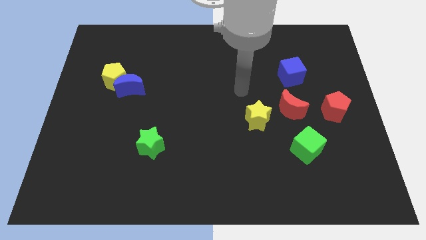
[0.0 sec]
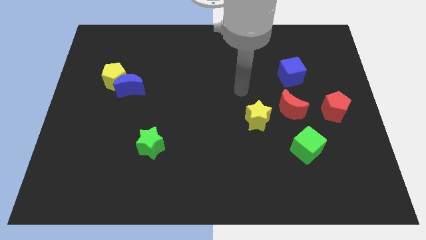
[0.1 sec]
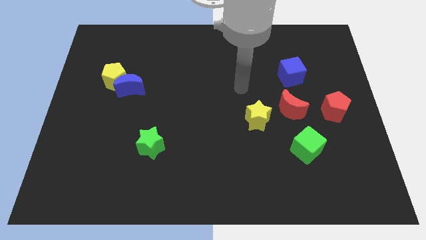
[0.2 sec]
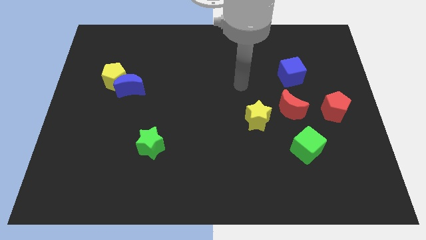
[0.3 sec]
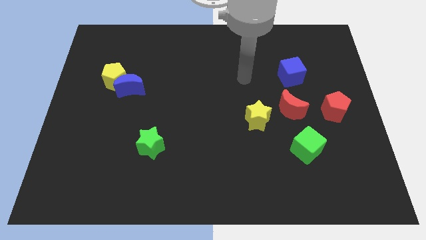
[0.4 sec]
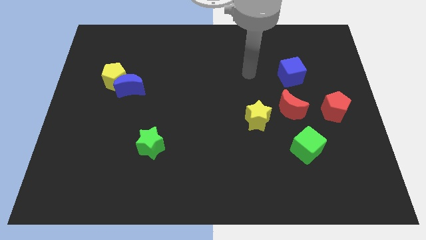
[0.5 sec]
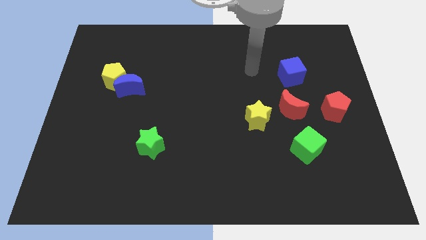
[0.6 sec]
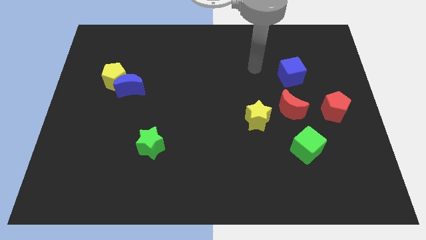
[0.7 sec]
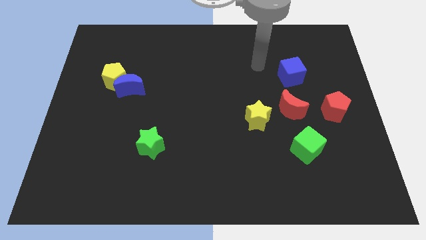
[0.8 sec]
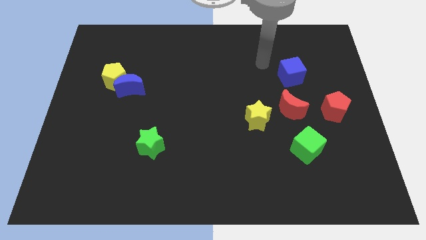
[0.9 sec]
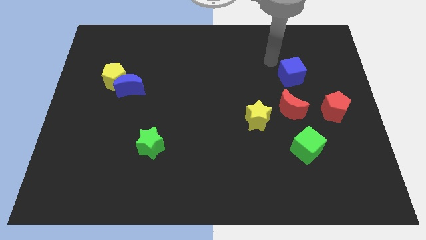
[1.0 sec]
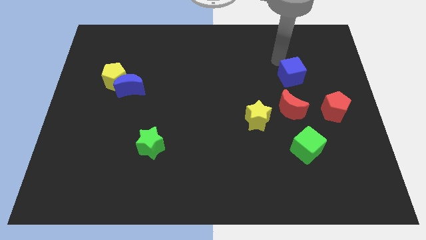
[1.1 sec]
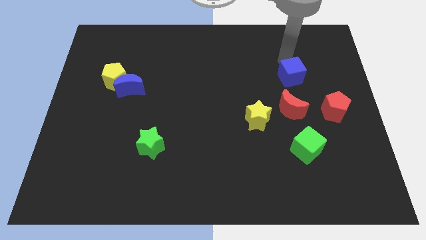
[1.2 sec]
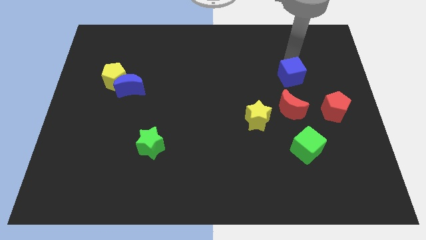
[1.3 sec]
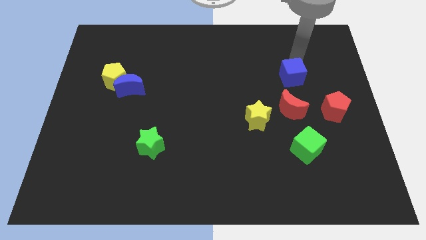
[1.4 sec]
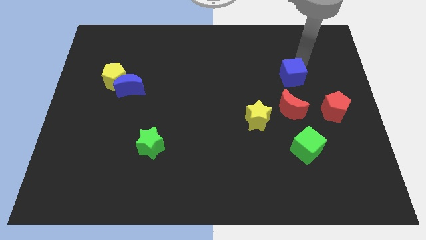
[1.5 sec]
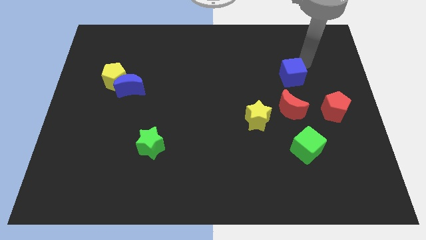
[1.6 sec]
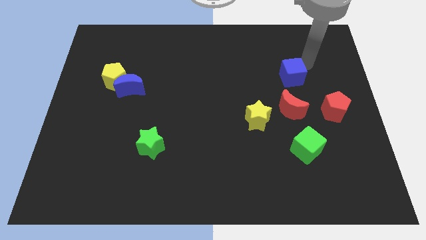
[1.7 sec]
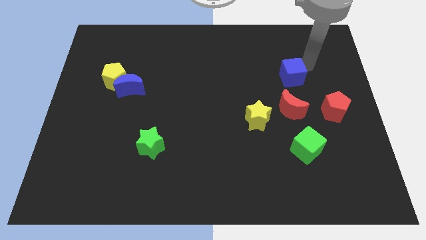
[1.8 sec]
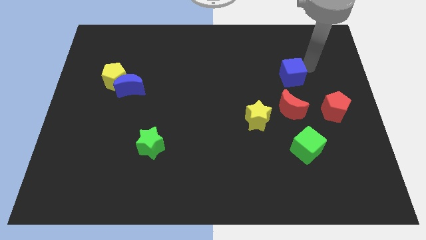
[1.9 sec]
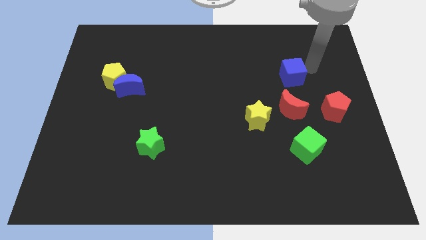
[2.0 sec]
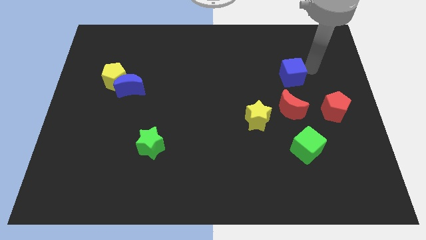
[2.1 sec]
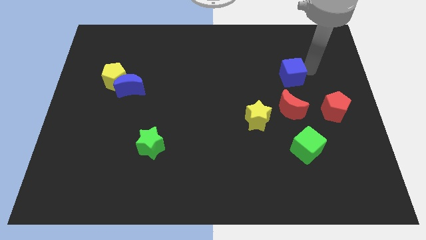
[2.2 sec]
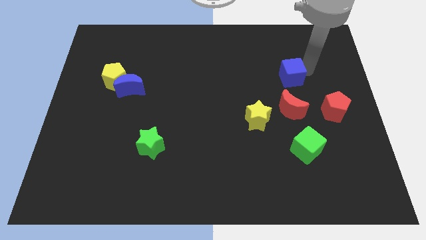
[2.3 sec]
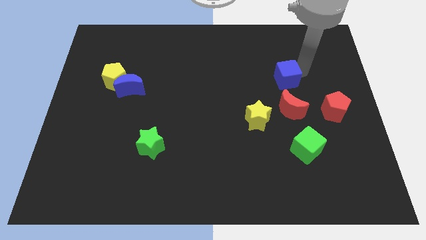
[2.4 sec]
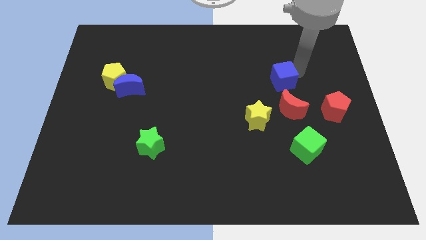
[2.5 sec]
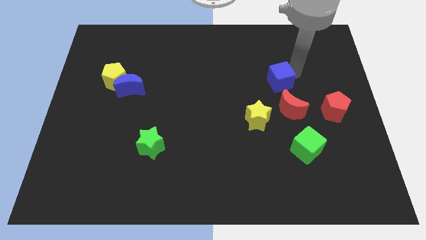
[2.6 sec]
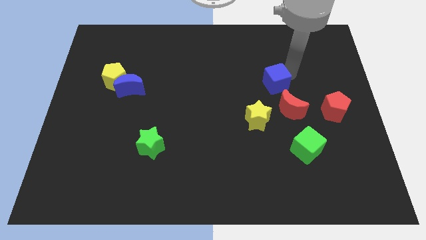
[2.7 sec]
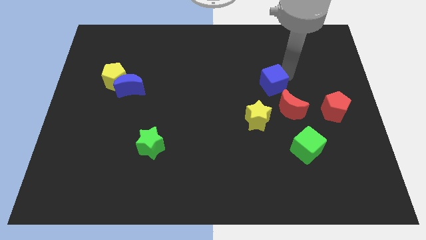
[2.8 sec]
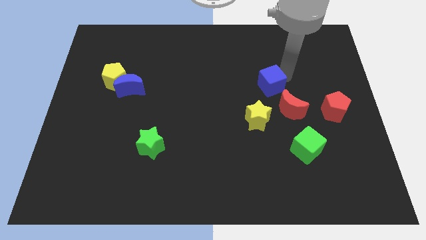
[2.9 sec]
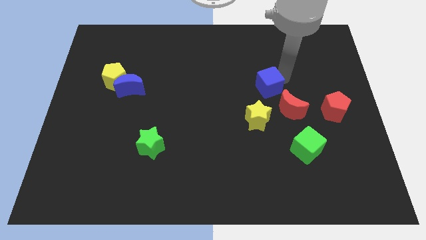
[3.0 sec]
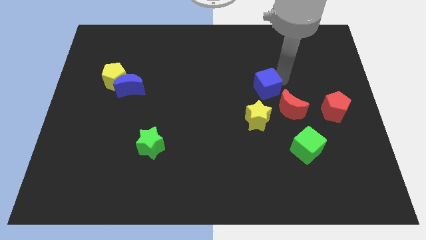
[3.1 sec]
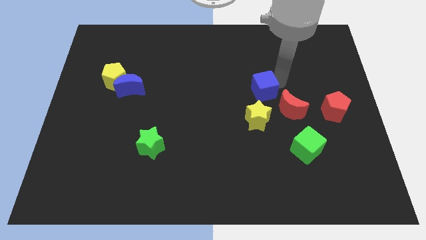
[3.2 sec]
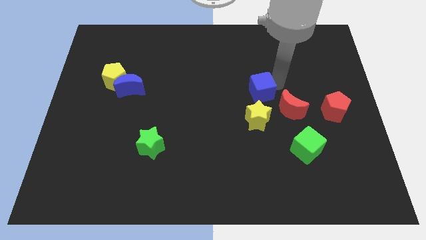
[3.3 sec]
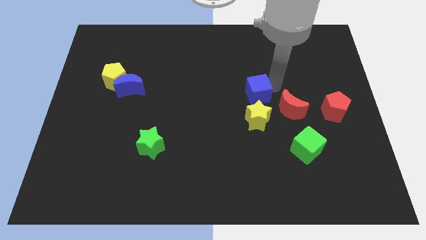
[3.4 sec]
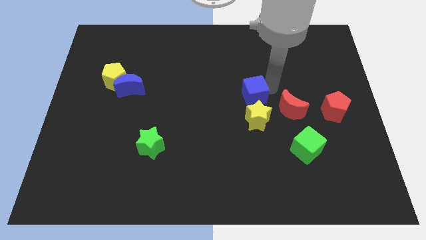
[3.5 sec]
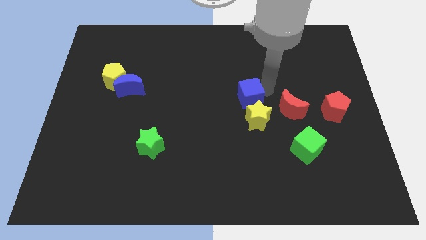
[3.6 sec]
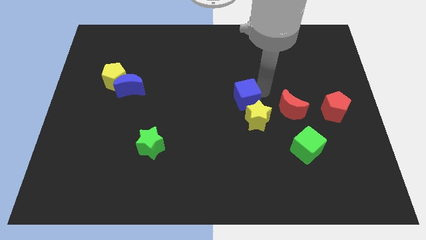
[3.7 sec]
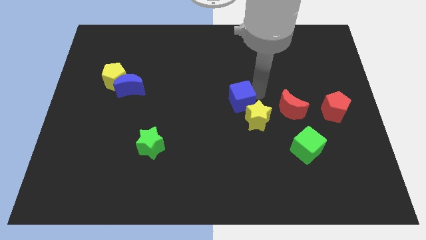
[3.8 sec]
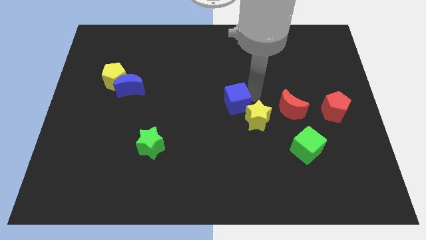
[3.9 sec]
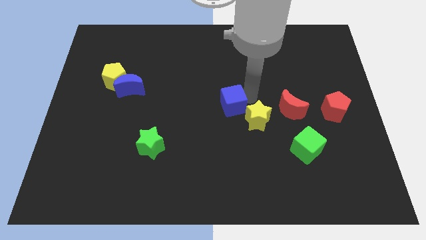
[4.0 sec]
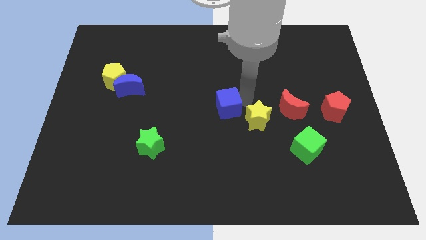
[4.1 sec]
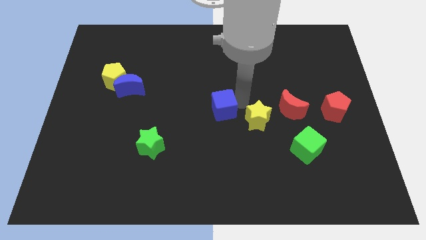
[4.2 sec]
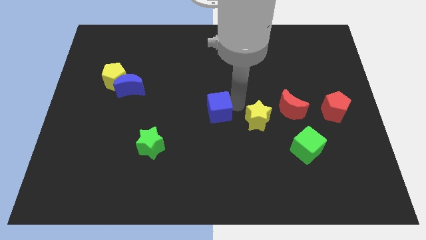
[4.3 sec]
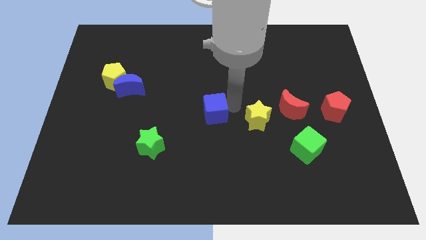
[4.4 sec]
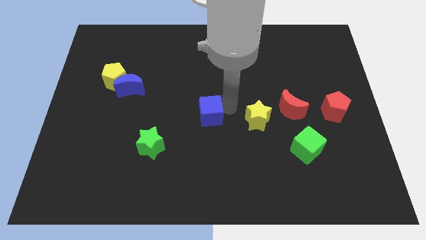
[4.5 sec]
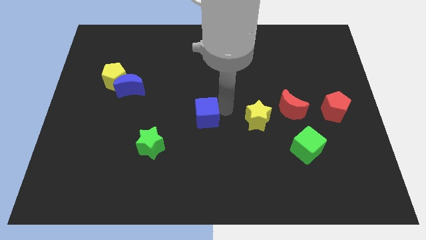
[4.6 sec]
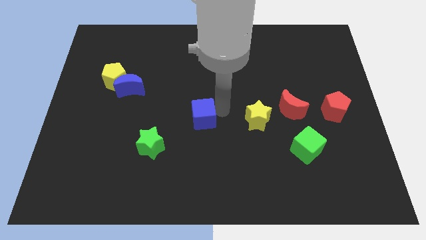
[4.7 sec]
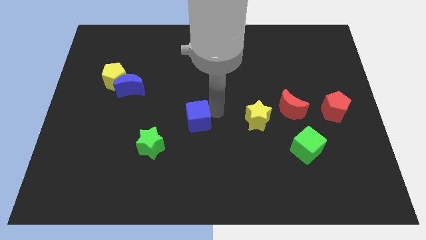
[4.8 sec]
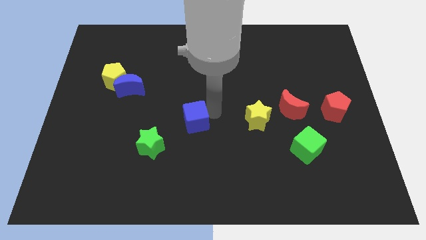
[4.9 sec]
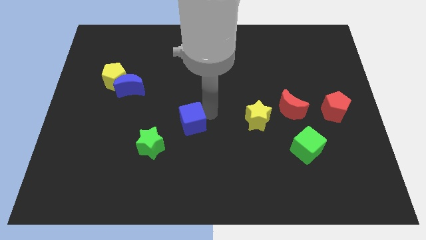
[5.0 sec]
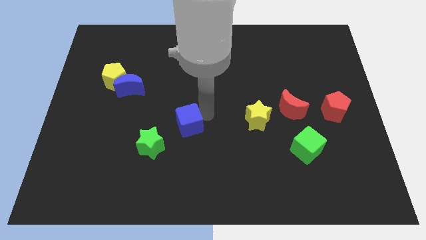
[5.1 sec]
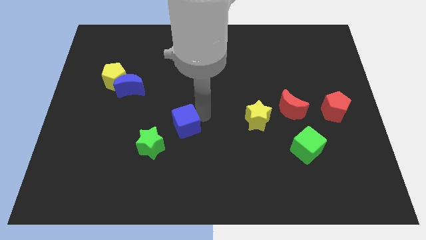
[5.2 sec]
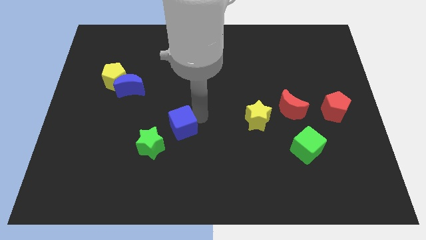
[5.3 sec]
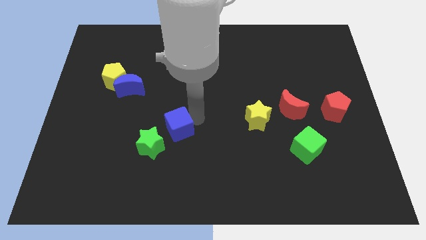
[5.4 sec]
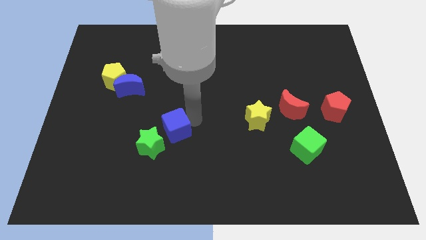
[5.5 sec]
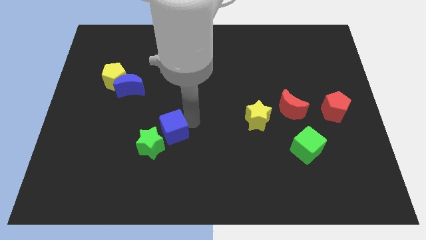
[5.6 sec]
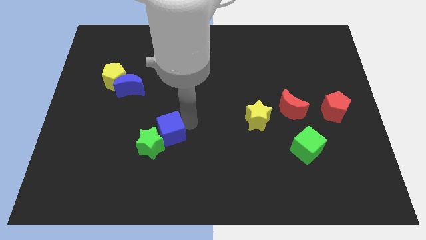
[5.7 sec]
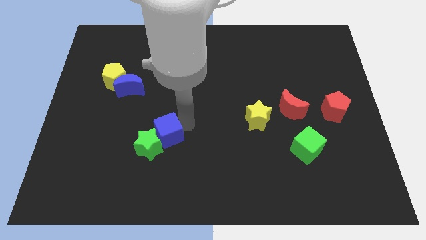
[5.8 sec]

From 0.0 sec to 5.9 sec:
put the blue cube close to the green star

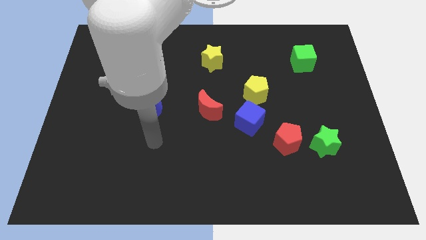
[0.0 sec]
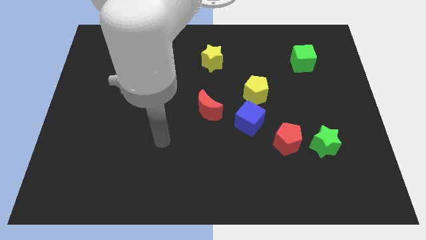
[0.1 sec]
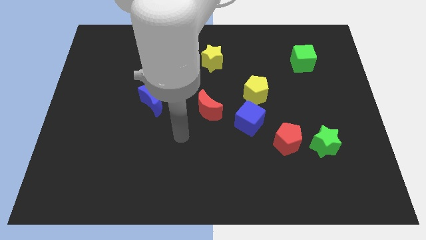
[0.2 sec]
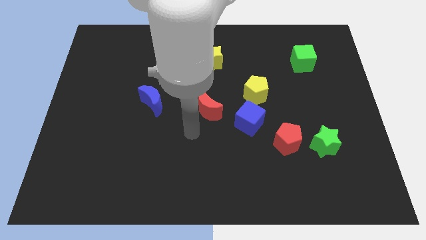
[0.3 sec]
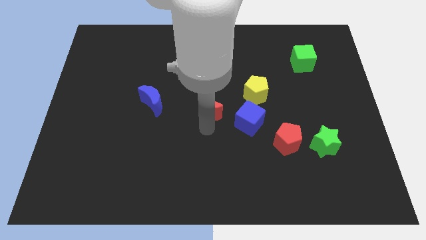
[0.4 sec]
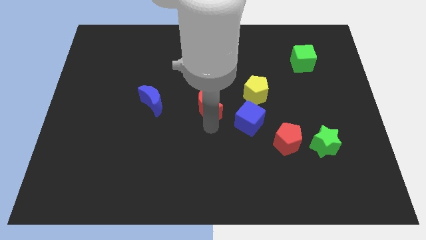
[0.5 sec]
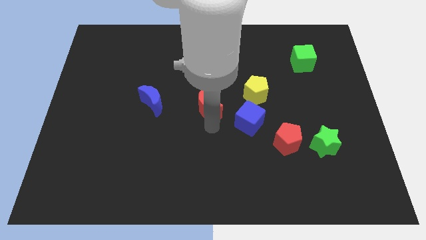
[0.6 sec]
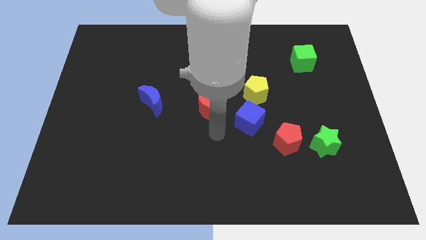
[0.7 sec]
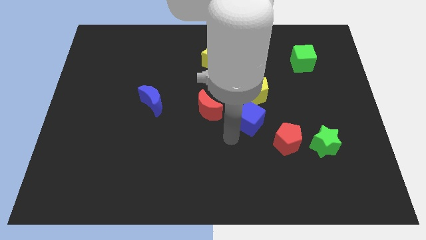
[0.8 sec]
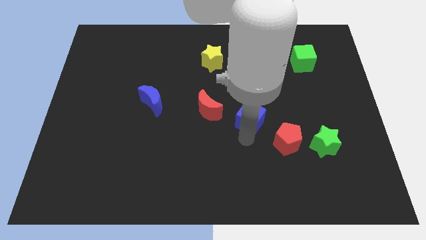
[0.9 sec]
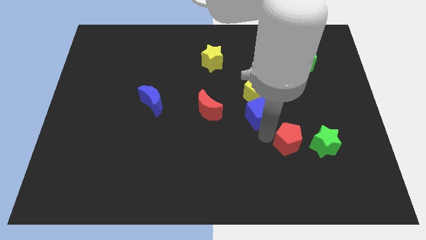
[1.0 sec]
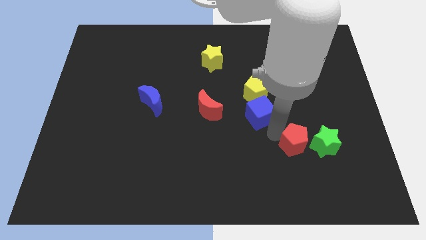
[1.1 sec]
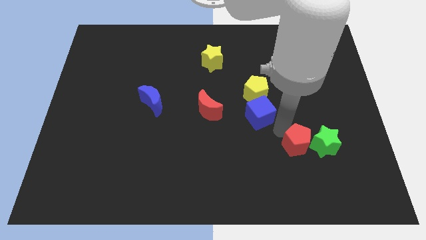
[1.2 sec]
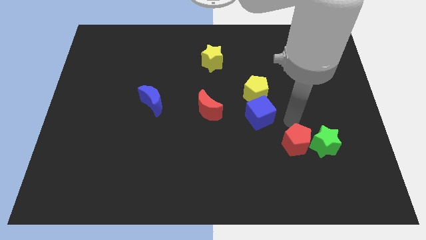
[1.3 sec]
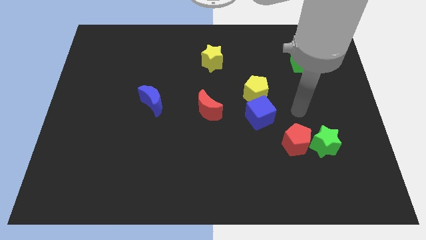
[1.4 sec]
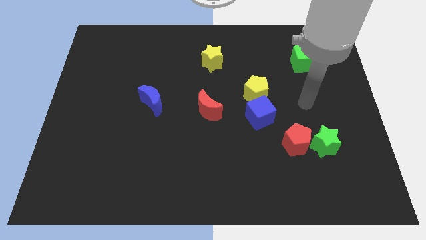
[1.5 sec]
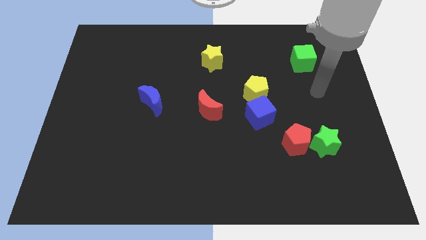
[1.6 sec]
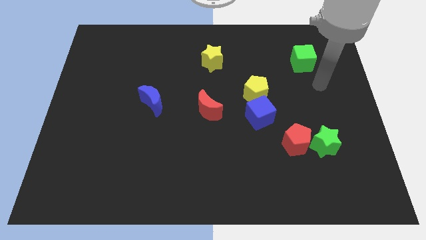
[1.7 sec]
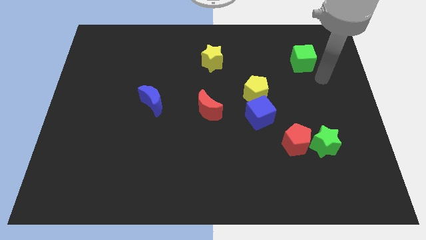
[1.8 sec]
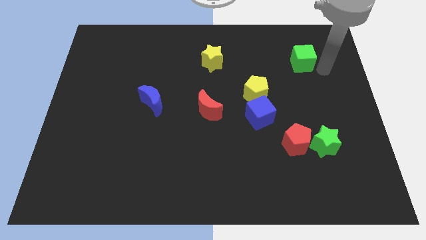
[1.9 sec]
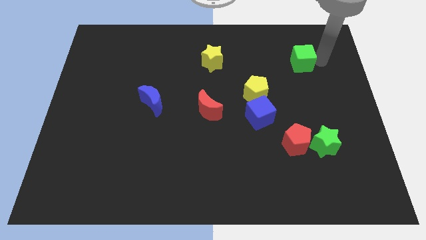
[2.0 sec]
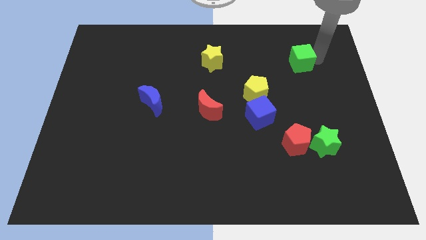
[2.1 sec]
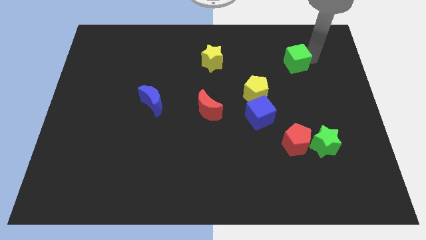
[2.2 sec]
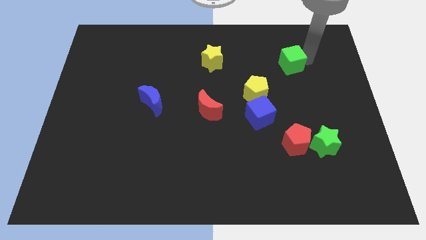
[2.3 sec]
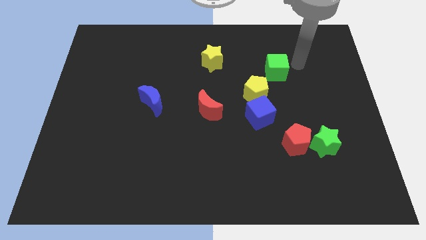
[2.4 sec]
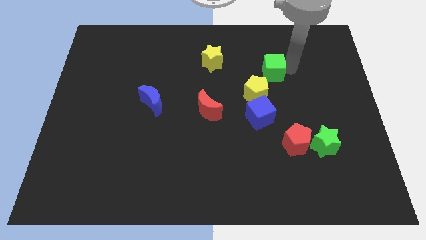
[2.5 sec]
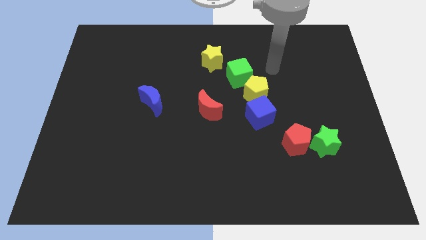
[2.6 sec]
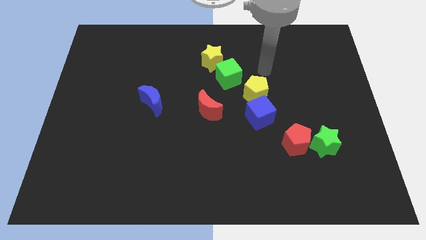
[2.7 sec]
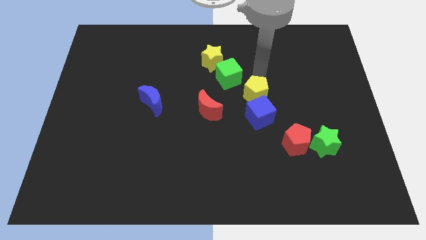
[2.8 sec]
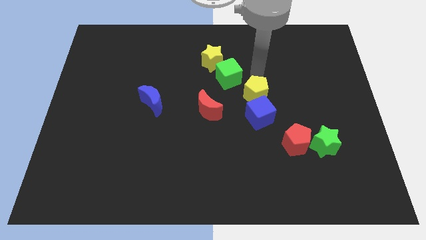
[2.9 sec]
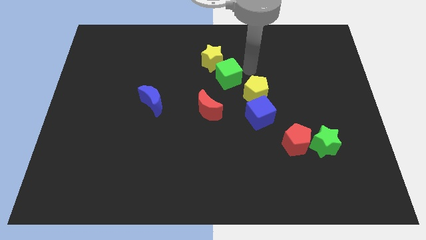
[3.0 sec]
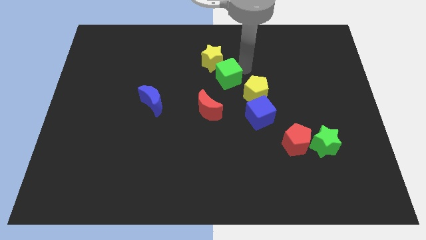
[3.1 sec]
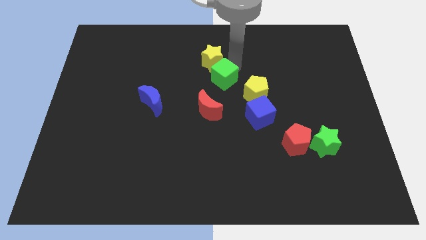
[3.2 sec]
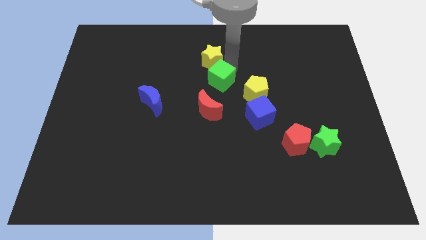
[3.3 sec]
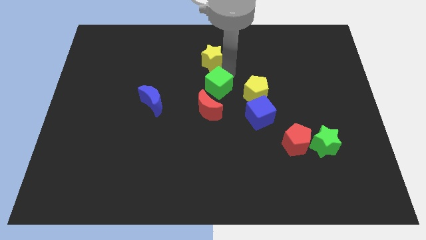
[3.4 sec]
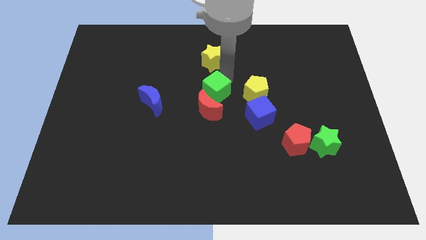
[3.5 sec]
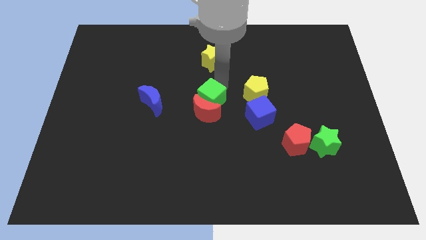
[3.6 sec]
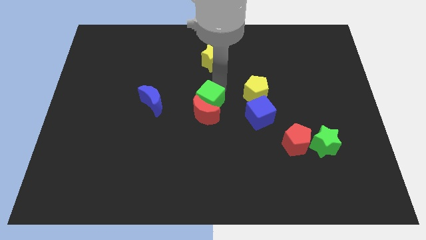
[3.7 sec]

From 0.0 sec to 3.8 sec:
push the green cube to the red moon
